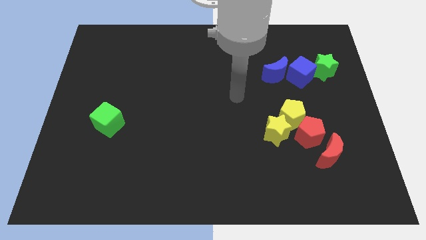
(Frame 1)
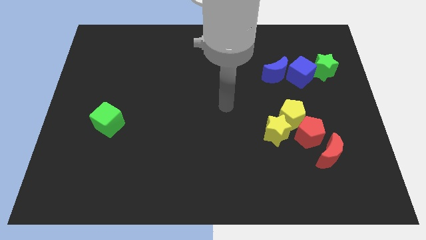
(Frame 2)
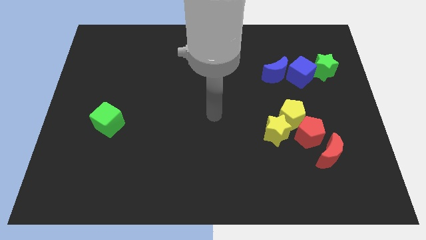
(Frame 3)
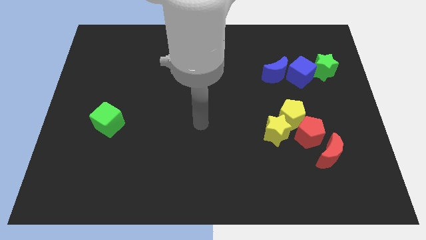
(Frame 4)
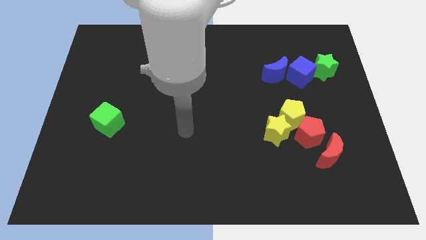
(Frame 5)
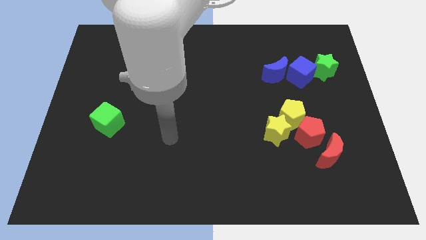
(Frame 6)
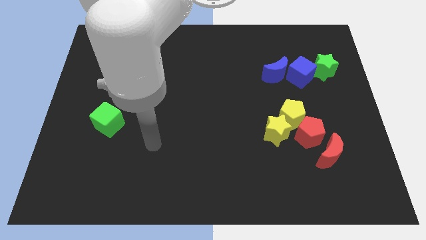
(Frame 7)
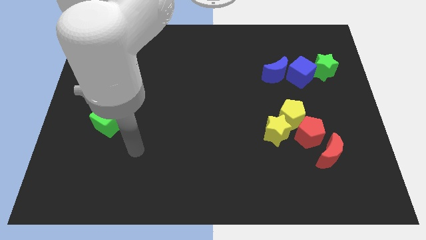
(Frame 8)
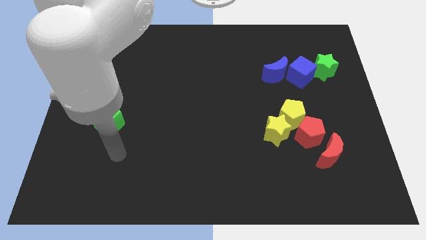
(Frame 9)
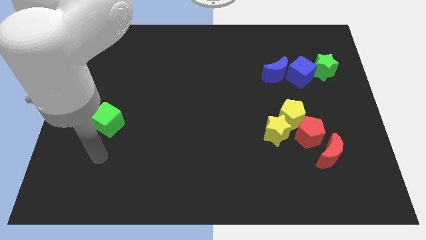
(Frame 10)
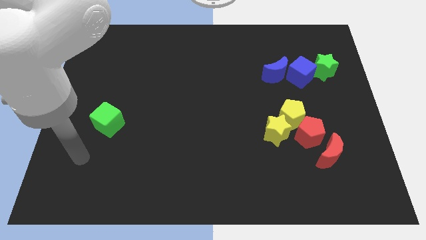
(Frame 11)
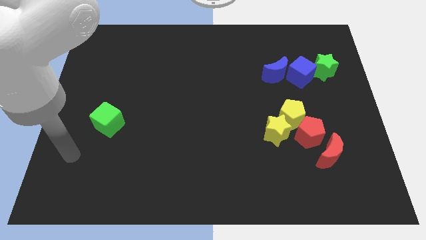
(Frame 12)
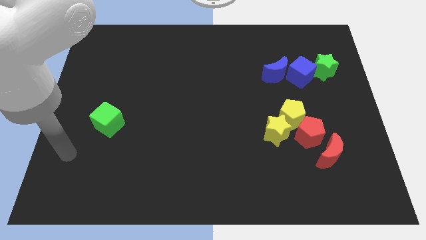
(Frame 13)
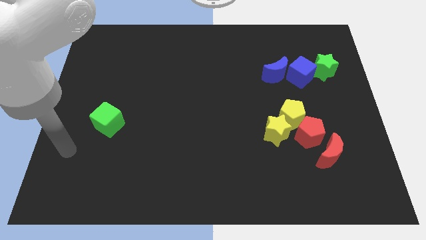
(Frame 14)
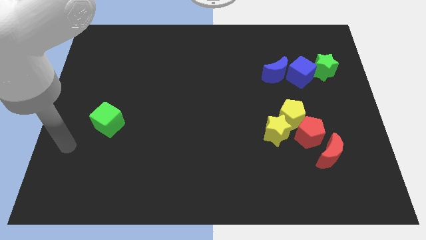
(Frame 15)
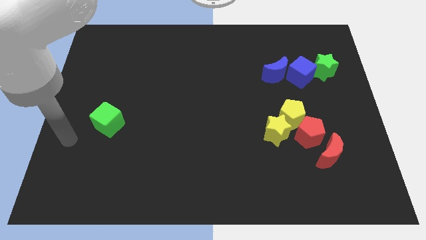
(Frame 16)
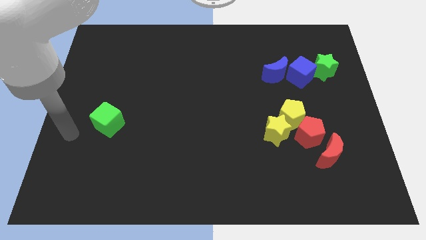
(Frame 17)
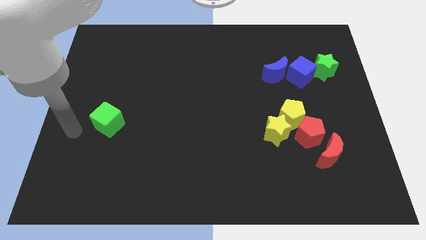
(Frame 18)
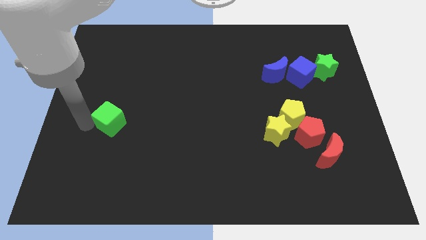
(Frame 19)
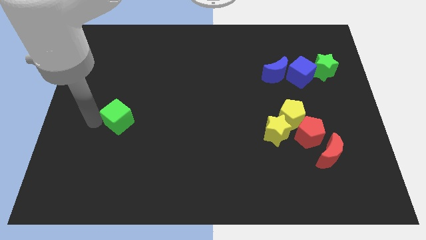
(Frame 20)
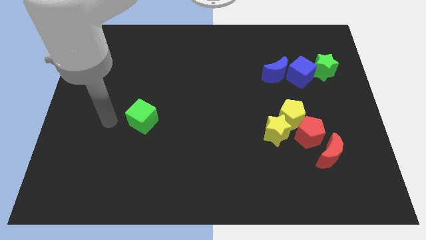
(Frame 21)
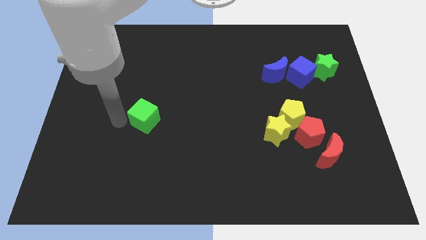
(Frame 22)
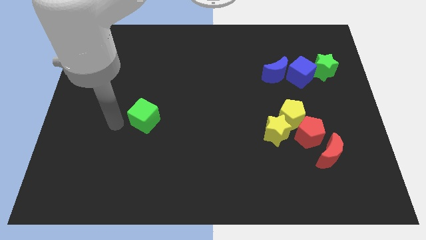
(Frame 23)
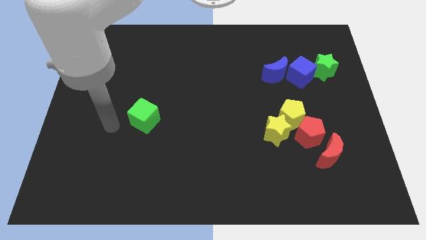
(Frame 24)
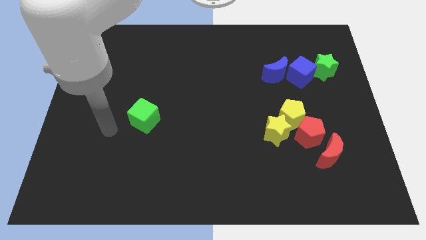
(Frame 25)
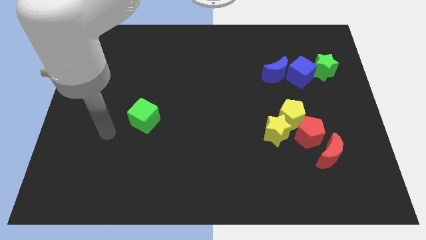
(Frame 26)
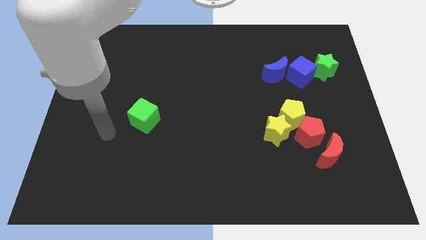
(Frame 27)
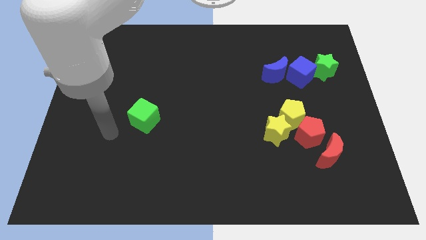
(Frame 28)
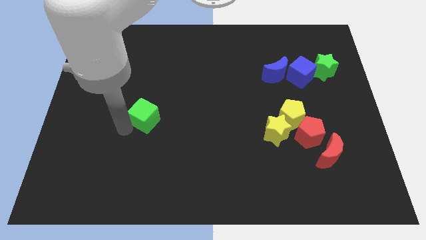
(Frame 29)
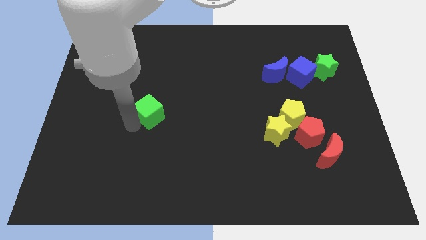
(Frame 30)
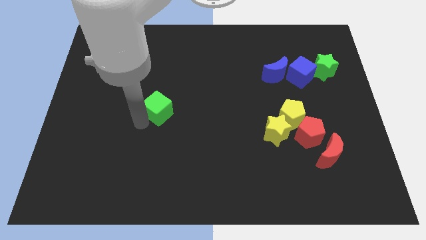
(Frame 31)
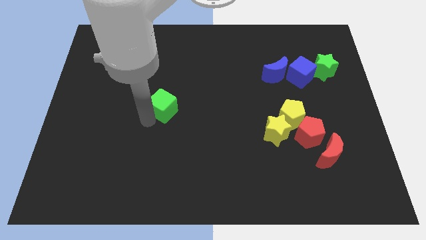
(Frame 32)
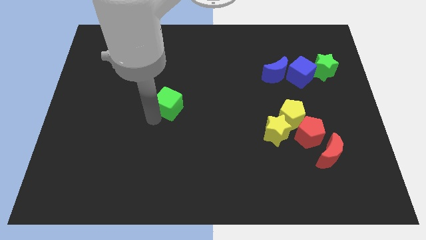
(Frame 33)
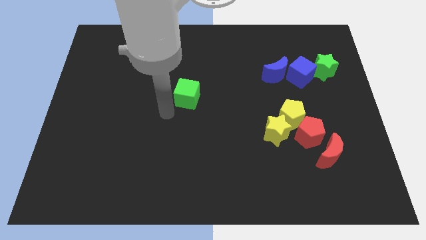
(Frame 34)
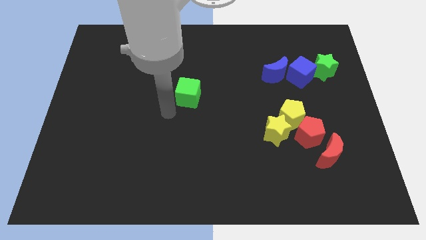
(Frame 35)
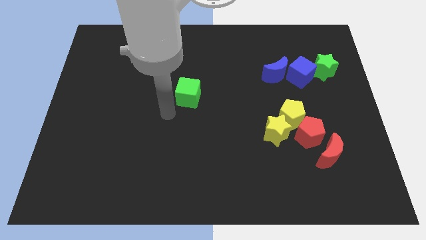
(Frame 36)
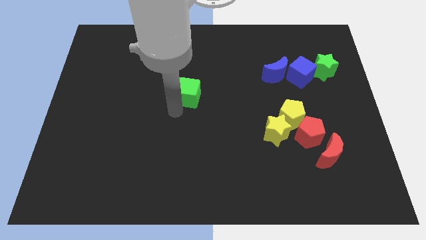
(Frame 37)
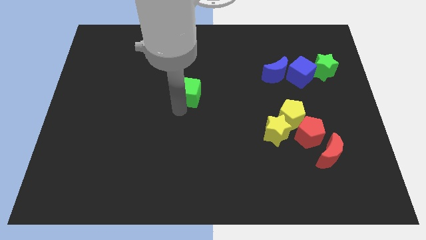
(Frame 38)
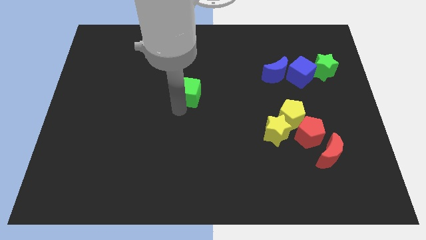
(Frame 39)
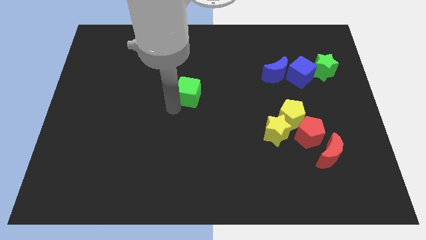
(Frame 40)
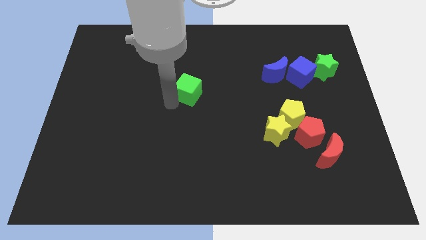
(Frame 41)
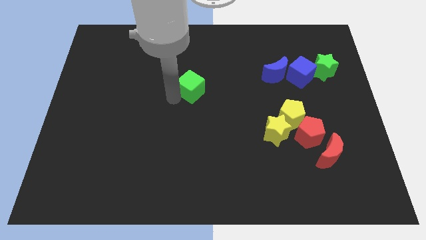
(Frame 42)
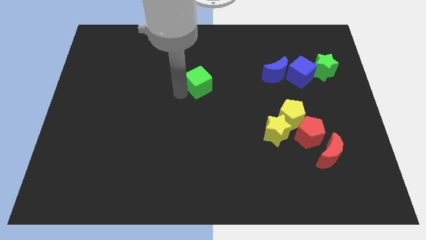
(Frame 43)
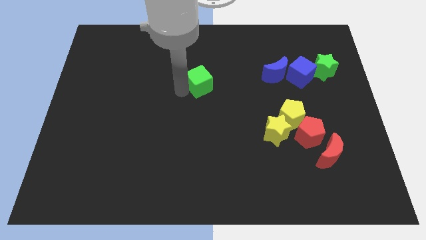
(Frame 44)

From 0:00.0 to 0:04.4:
push the green cube towards the top center

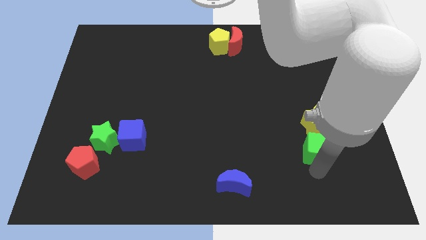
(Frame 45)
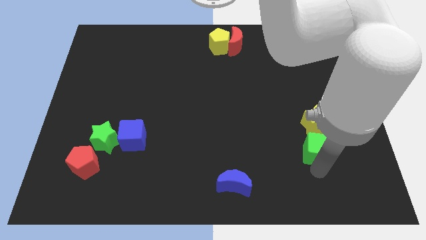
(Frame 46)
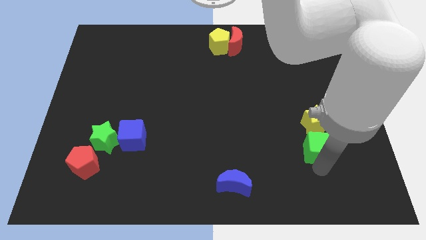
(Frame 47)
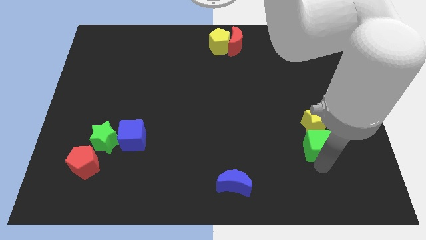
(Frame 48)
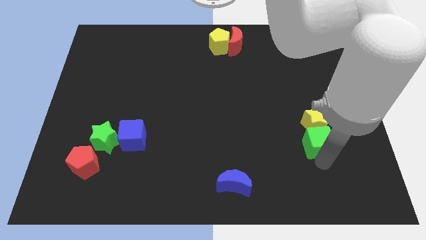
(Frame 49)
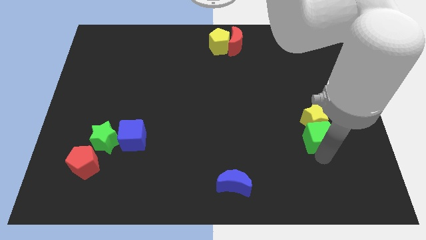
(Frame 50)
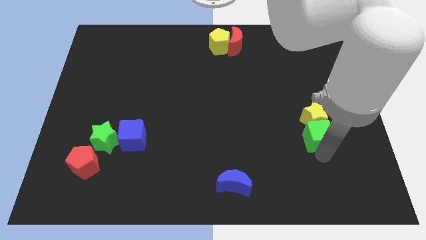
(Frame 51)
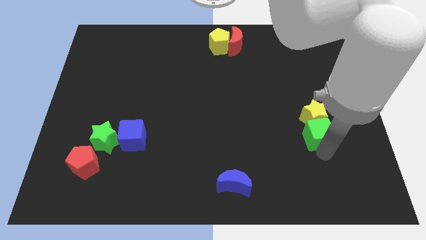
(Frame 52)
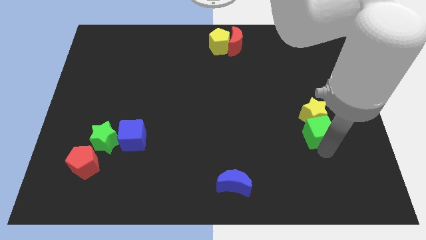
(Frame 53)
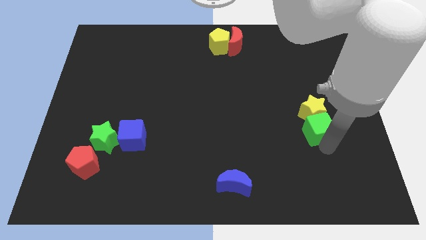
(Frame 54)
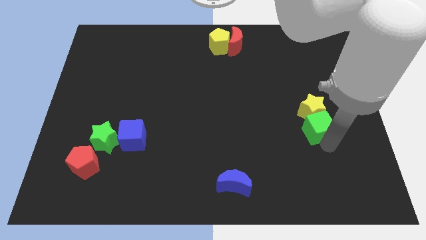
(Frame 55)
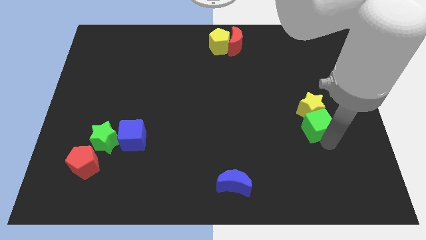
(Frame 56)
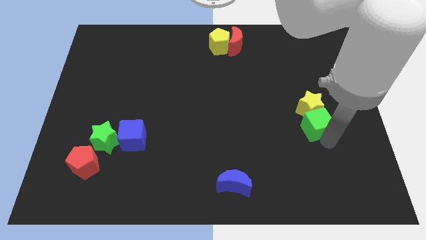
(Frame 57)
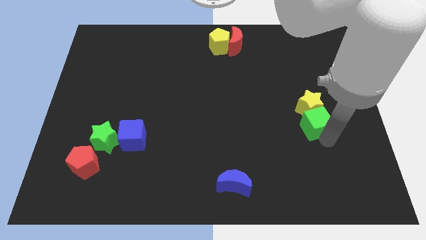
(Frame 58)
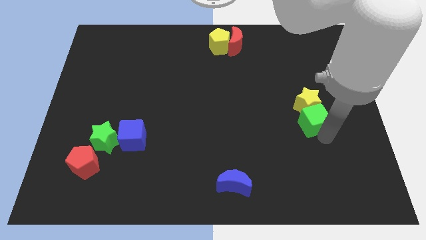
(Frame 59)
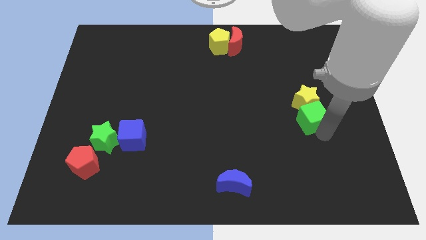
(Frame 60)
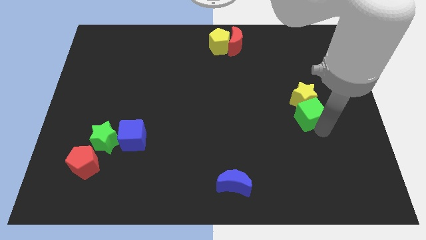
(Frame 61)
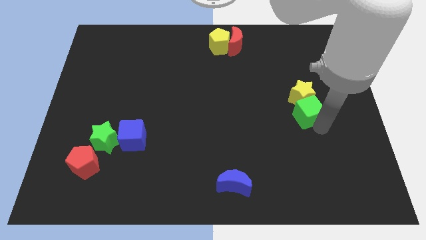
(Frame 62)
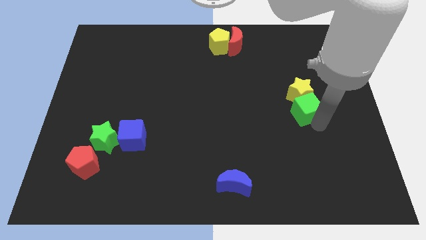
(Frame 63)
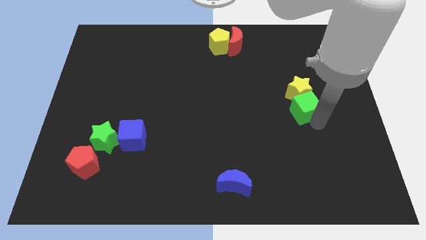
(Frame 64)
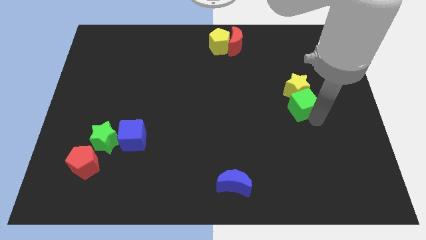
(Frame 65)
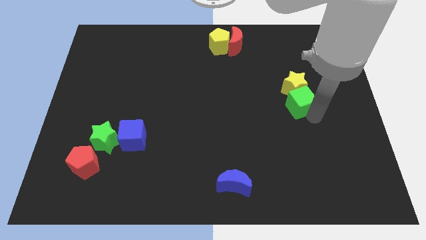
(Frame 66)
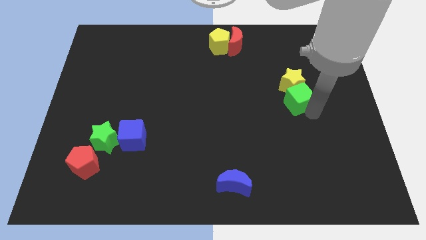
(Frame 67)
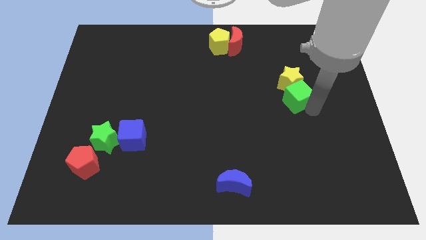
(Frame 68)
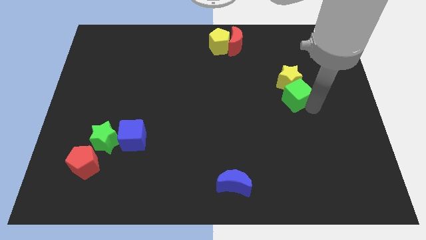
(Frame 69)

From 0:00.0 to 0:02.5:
push the green cube and yellow star upwards

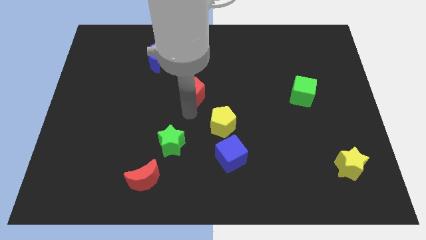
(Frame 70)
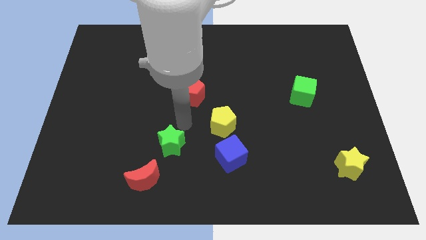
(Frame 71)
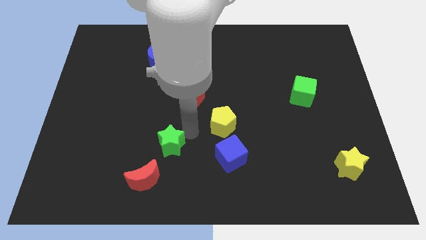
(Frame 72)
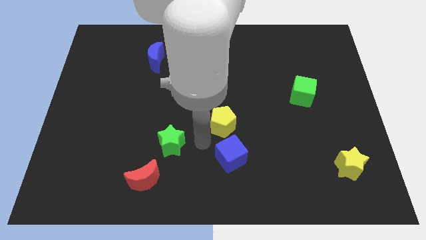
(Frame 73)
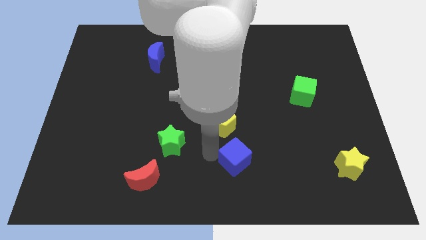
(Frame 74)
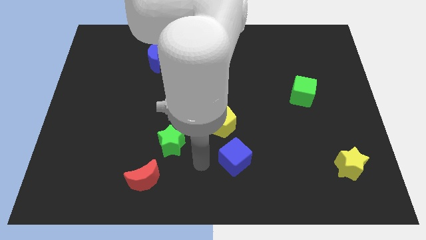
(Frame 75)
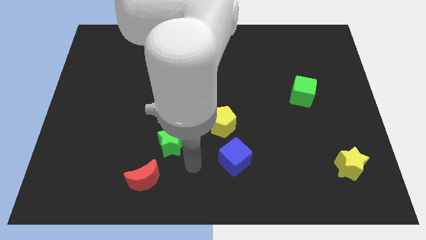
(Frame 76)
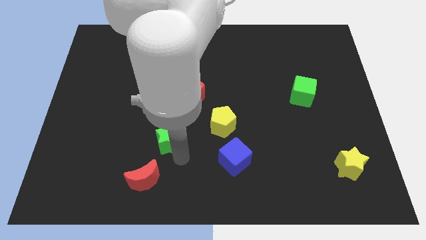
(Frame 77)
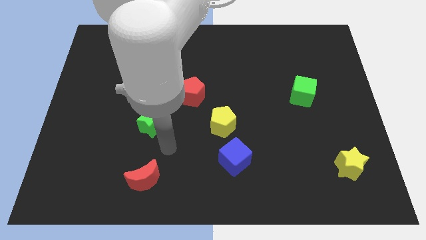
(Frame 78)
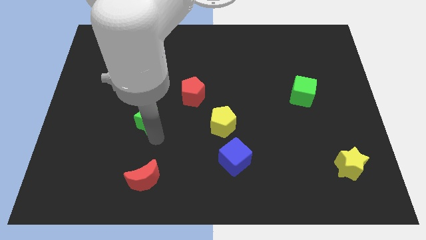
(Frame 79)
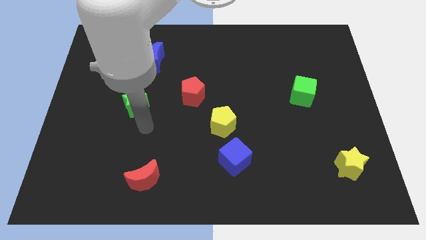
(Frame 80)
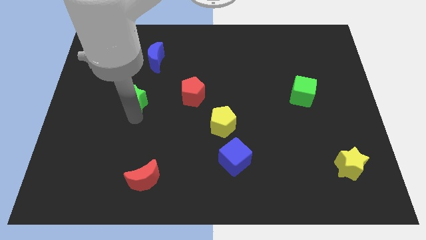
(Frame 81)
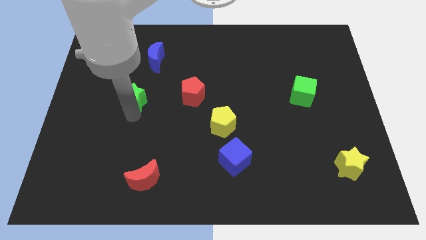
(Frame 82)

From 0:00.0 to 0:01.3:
push the green star to the left side of the red pentagon

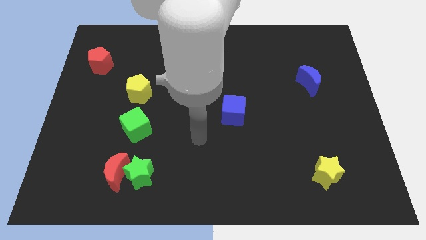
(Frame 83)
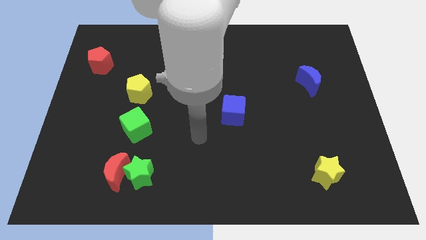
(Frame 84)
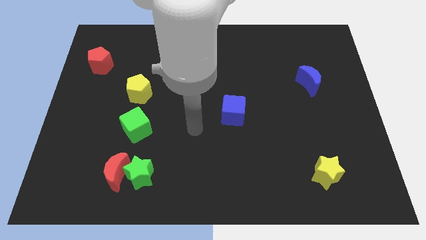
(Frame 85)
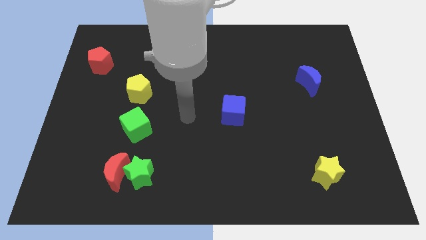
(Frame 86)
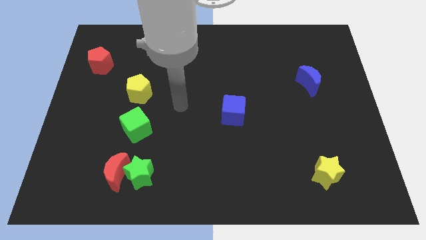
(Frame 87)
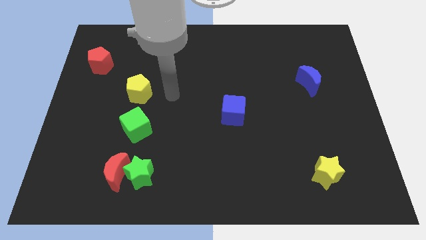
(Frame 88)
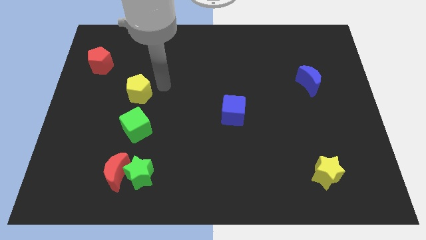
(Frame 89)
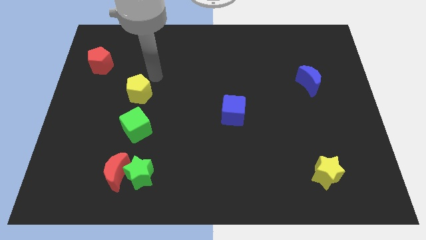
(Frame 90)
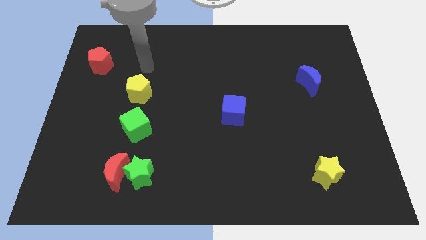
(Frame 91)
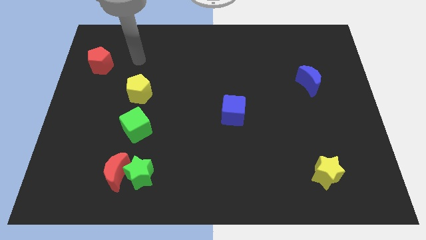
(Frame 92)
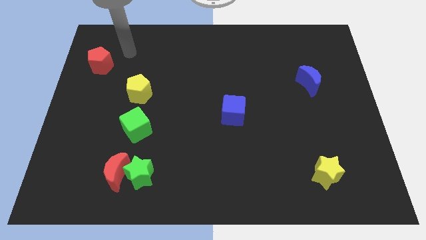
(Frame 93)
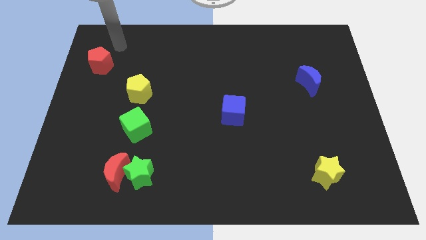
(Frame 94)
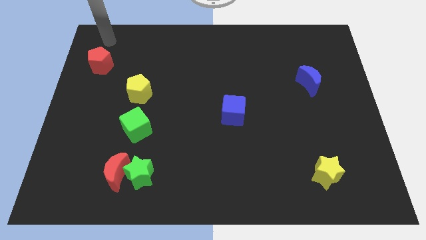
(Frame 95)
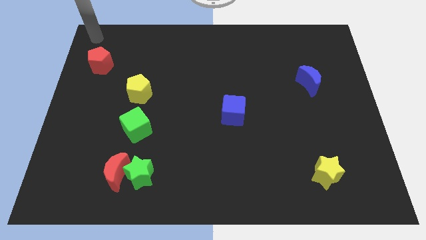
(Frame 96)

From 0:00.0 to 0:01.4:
place your hand above the red pentagon
